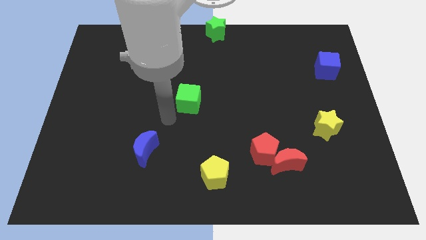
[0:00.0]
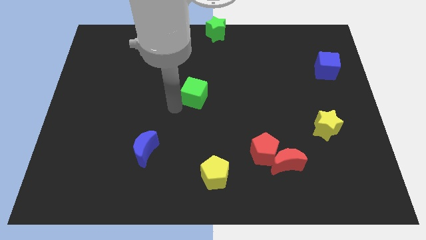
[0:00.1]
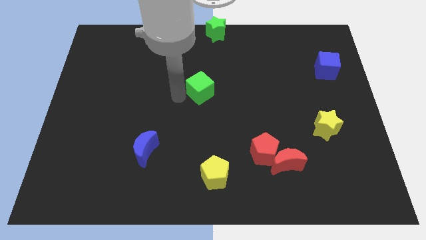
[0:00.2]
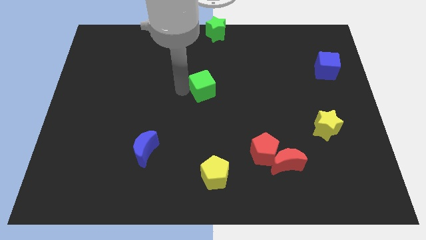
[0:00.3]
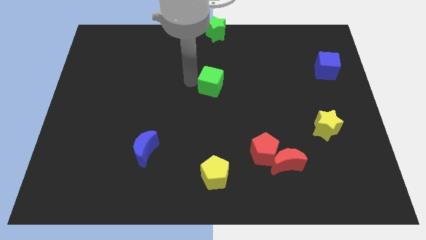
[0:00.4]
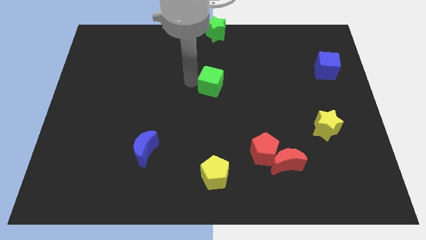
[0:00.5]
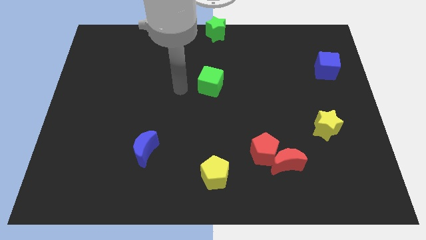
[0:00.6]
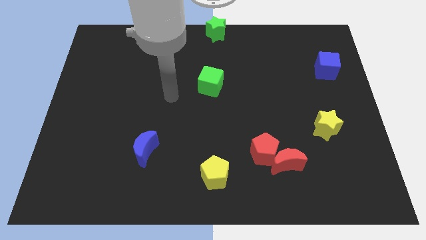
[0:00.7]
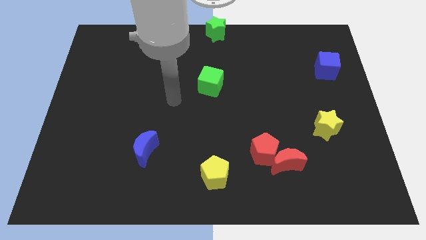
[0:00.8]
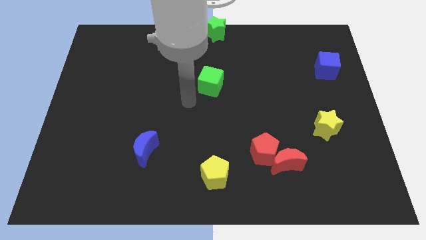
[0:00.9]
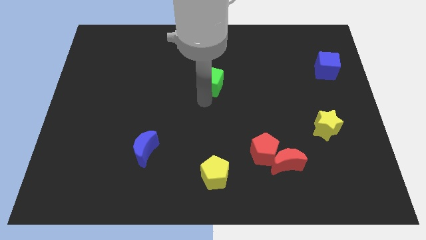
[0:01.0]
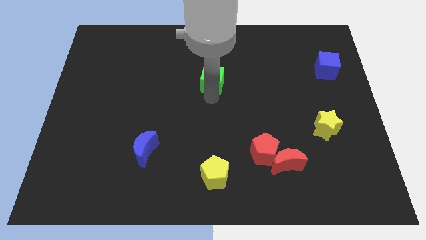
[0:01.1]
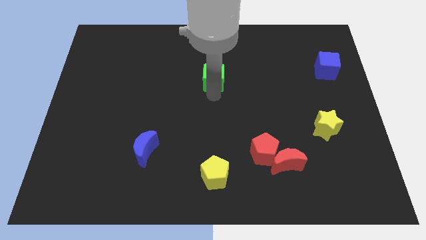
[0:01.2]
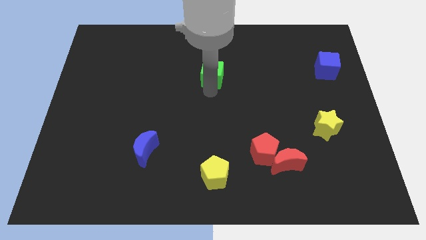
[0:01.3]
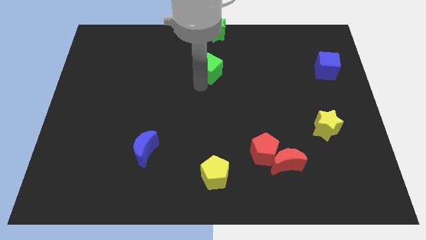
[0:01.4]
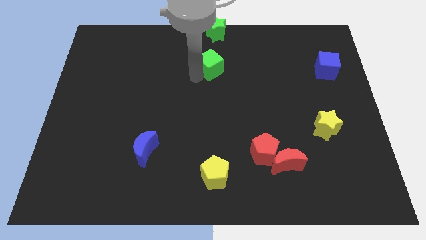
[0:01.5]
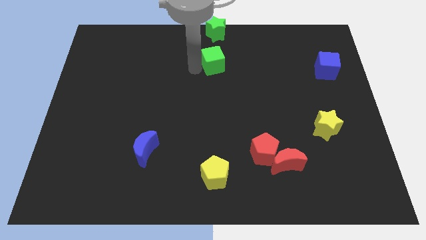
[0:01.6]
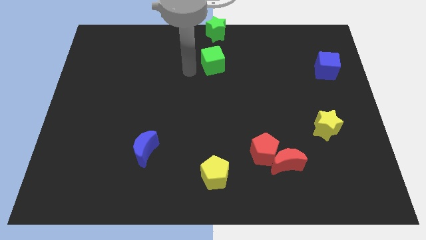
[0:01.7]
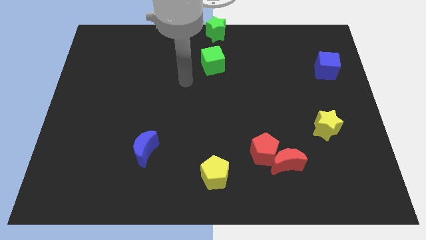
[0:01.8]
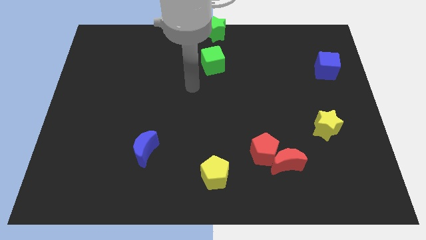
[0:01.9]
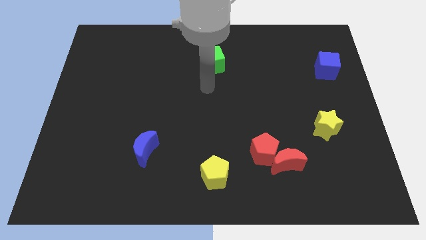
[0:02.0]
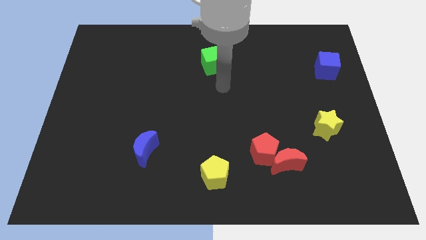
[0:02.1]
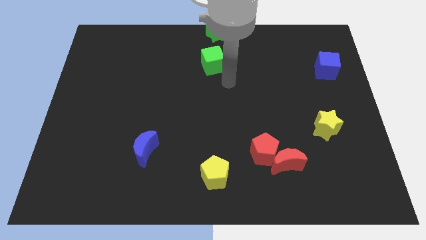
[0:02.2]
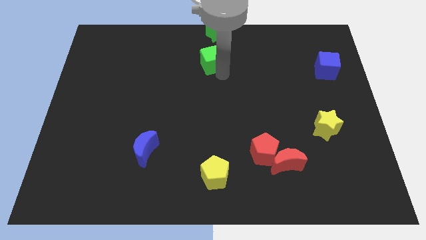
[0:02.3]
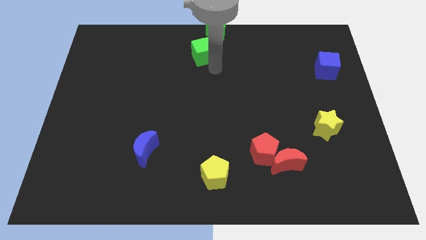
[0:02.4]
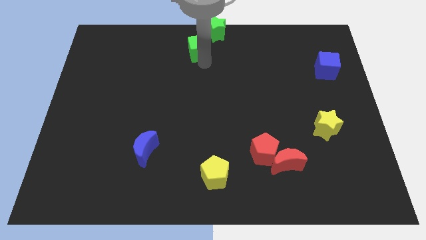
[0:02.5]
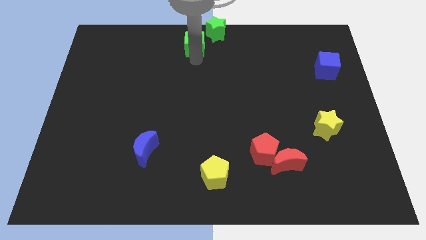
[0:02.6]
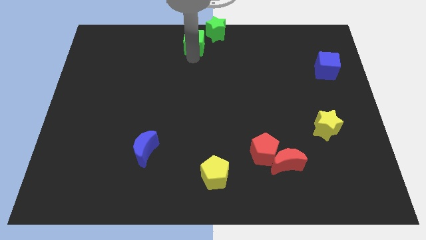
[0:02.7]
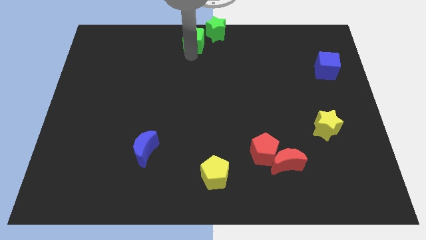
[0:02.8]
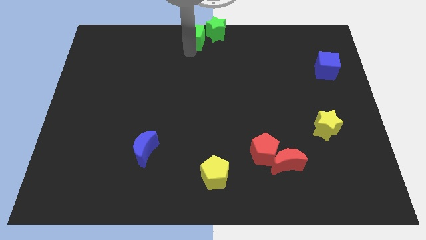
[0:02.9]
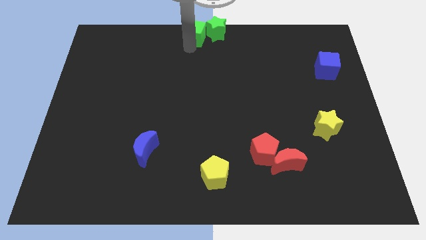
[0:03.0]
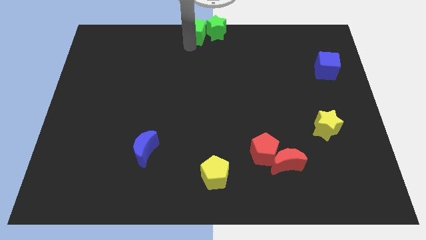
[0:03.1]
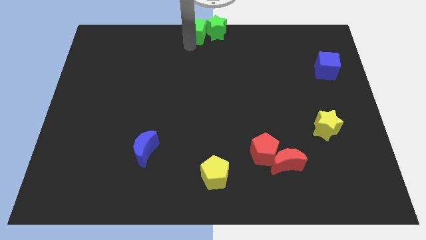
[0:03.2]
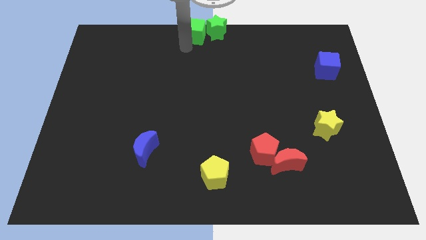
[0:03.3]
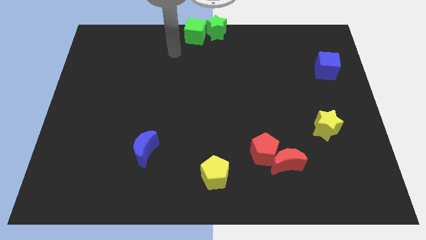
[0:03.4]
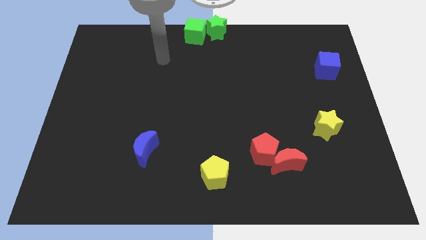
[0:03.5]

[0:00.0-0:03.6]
move the green cube to the left of the green star

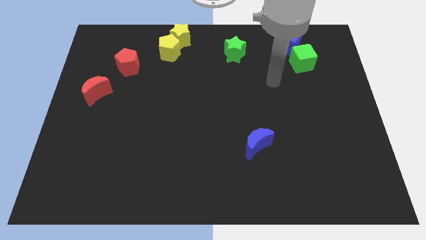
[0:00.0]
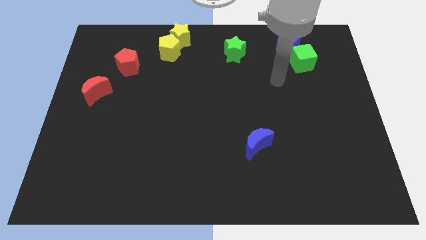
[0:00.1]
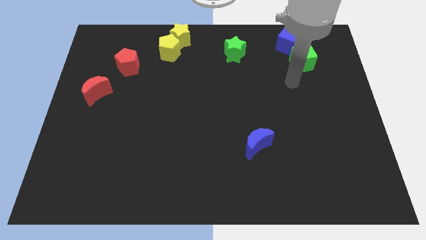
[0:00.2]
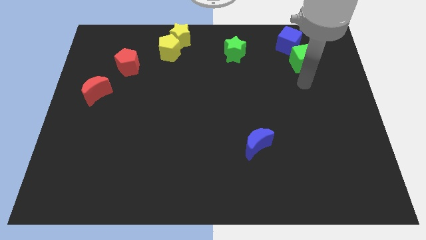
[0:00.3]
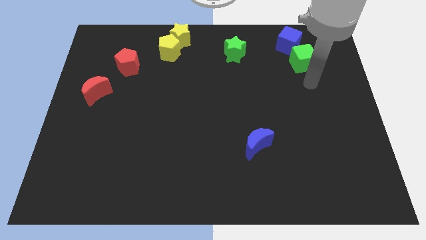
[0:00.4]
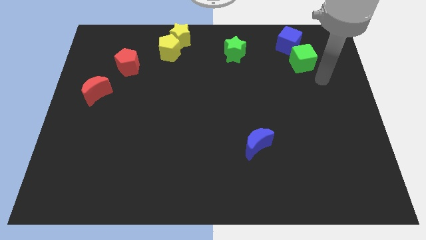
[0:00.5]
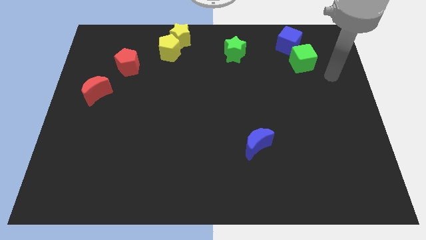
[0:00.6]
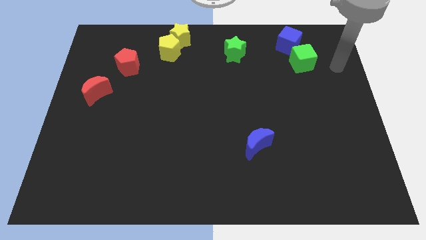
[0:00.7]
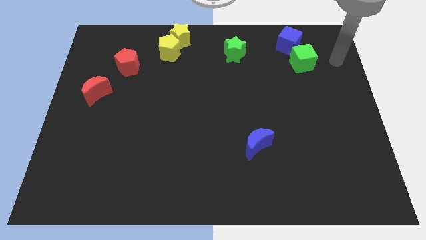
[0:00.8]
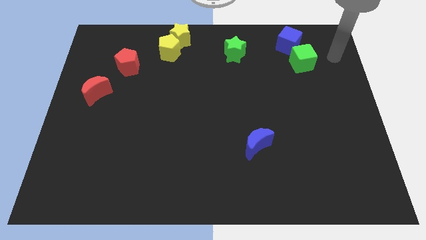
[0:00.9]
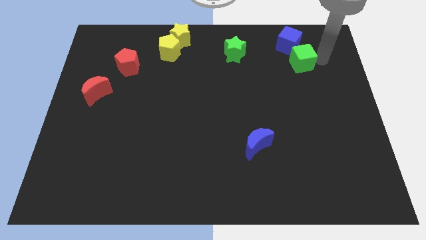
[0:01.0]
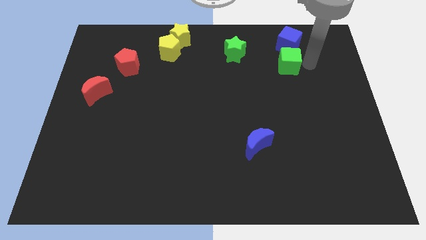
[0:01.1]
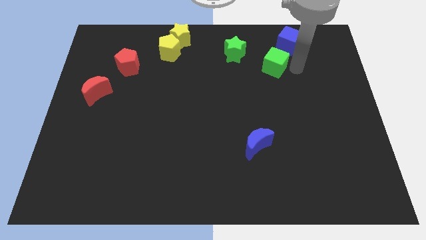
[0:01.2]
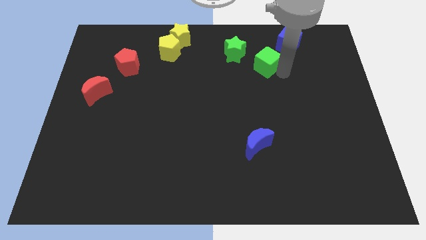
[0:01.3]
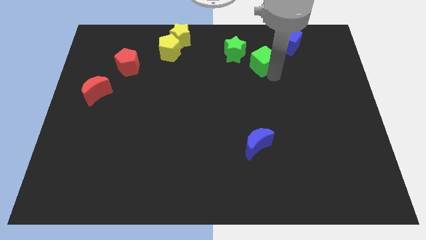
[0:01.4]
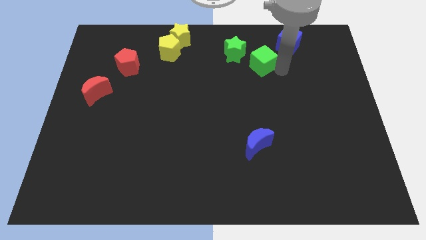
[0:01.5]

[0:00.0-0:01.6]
move the green cube to the green star

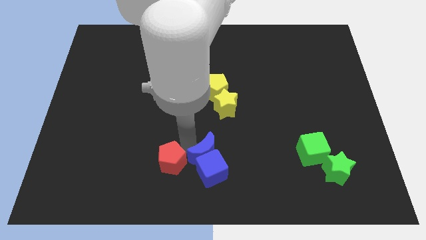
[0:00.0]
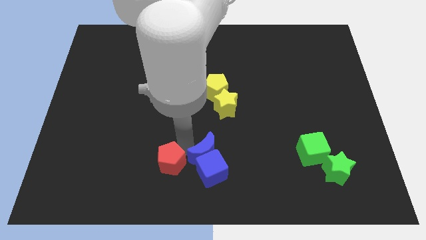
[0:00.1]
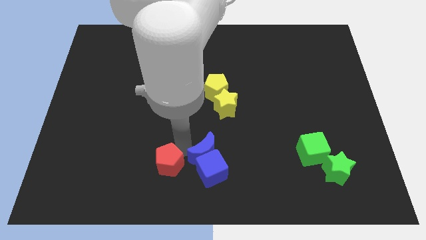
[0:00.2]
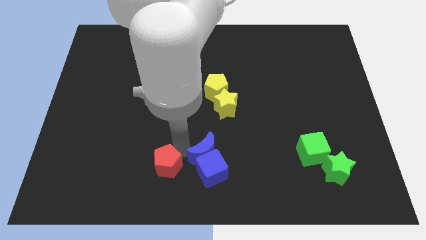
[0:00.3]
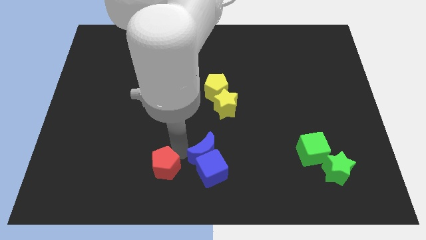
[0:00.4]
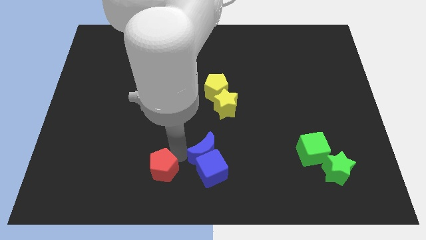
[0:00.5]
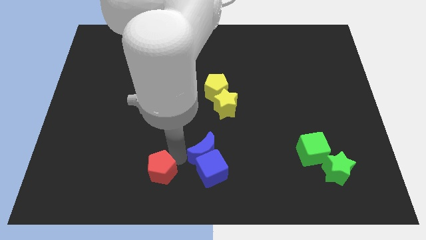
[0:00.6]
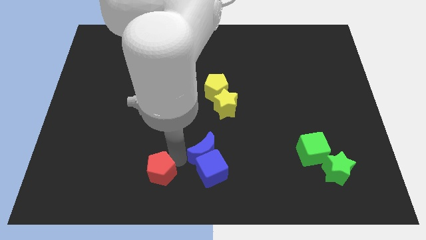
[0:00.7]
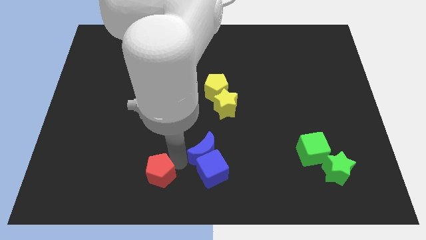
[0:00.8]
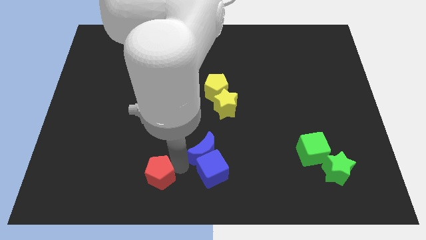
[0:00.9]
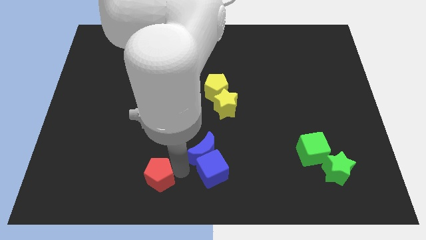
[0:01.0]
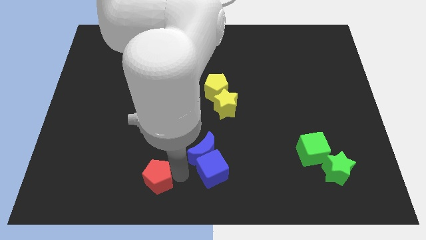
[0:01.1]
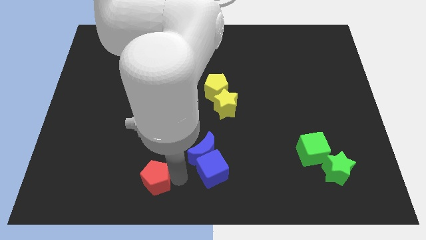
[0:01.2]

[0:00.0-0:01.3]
slightly push the red pentagon to the bottom side of the board

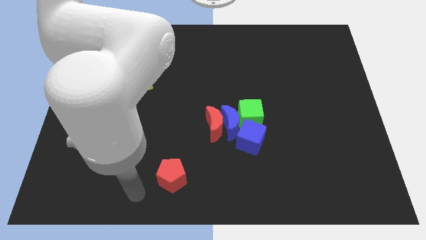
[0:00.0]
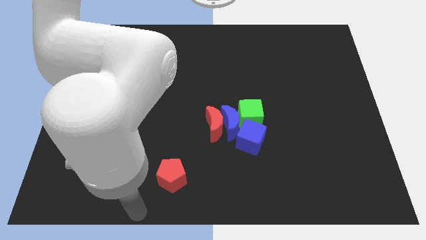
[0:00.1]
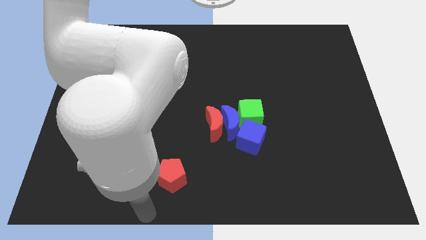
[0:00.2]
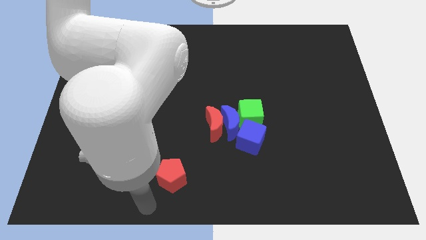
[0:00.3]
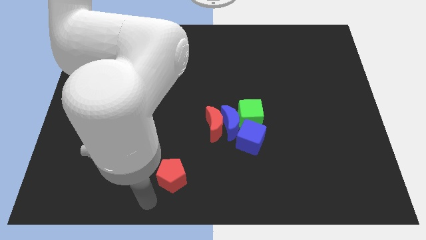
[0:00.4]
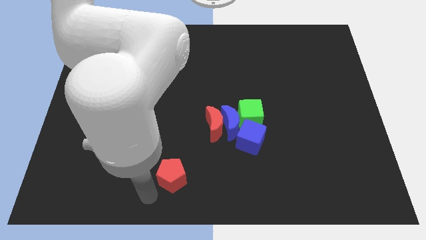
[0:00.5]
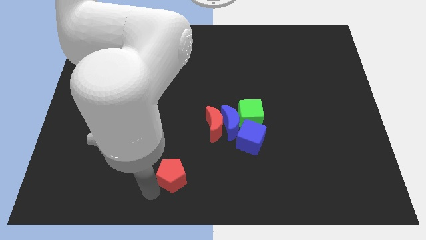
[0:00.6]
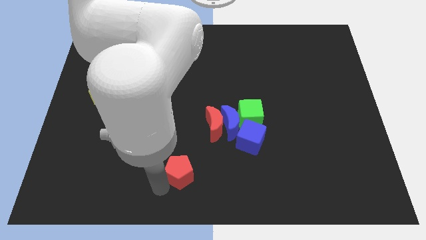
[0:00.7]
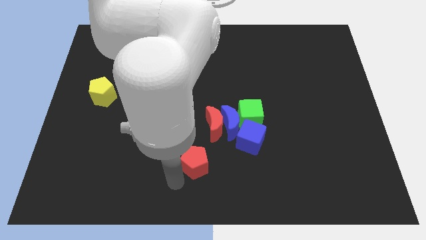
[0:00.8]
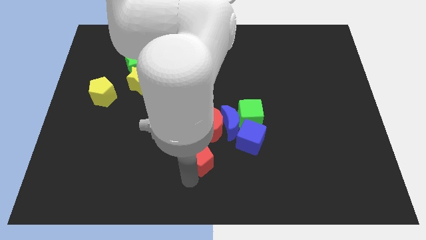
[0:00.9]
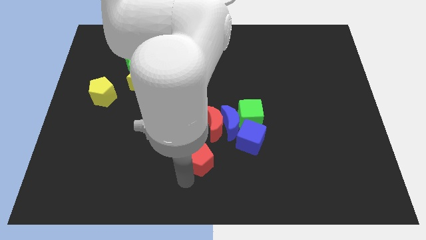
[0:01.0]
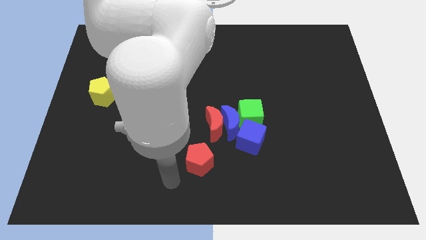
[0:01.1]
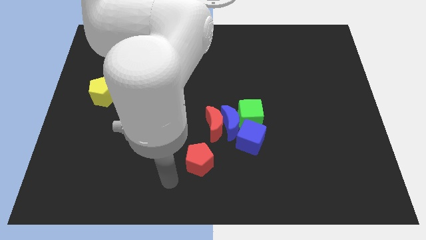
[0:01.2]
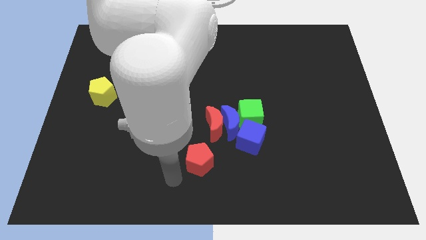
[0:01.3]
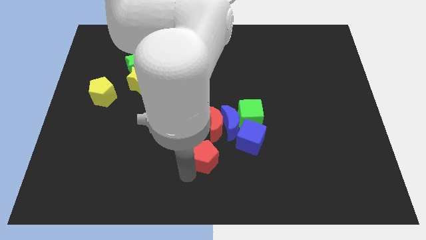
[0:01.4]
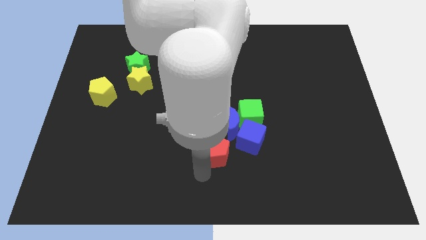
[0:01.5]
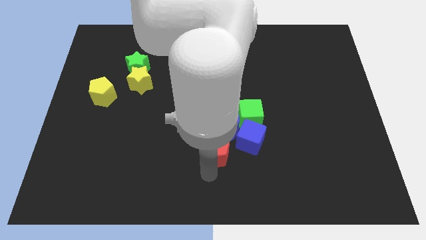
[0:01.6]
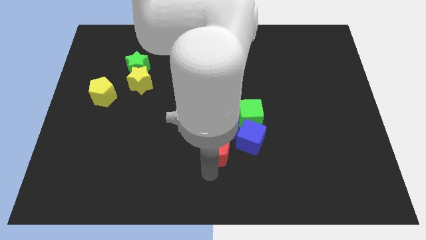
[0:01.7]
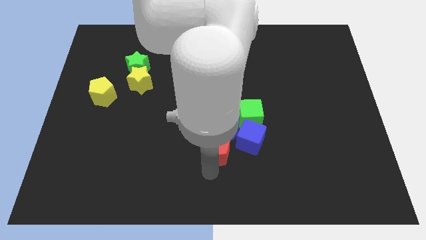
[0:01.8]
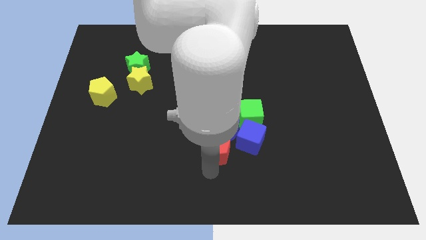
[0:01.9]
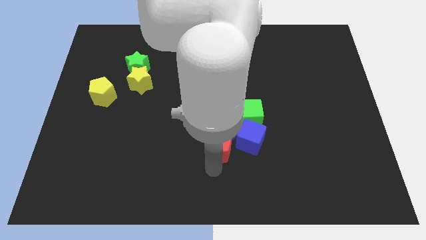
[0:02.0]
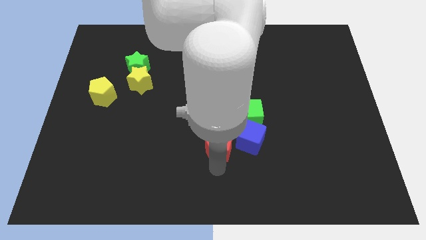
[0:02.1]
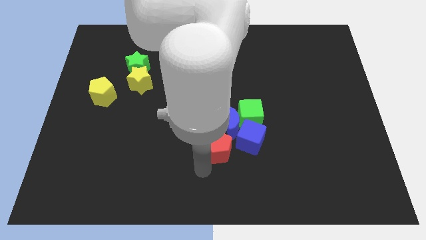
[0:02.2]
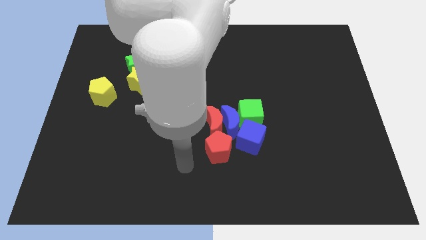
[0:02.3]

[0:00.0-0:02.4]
make the red pentagon to the bottom of the red crescent
